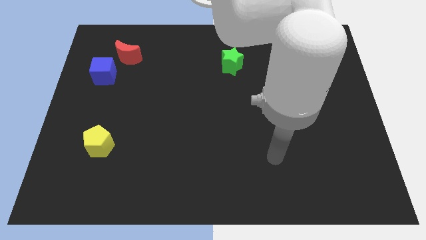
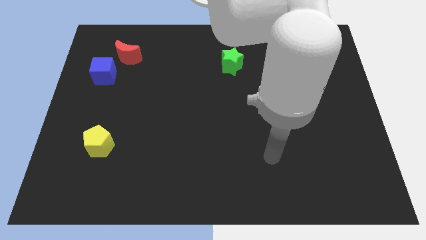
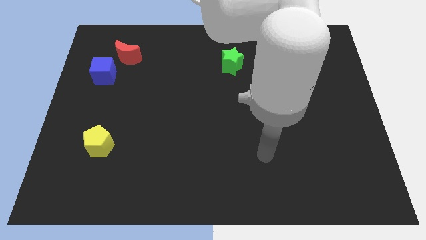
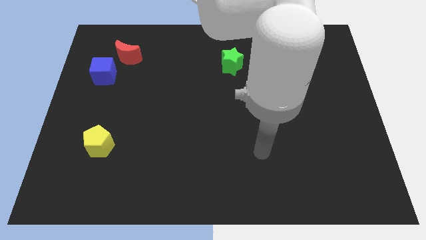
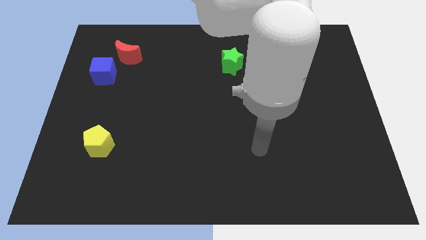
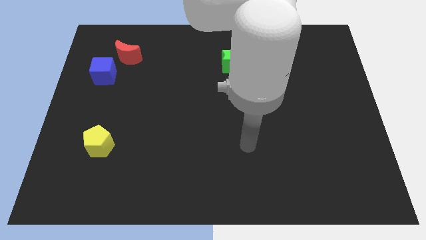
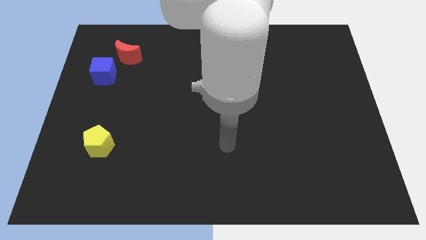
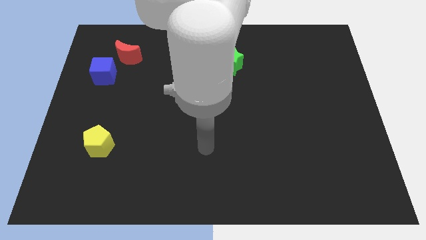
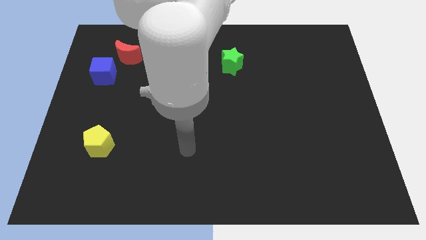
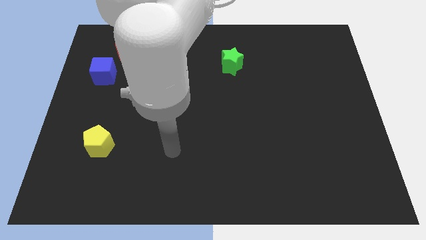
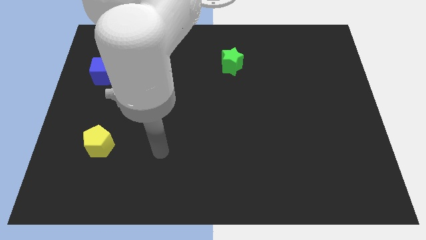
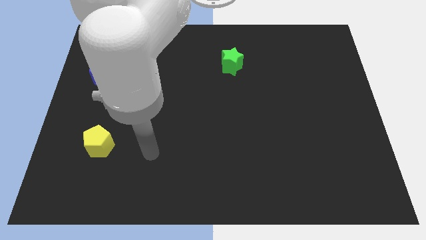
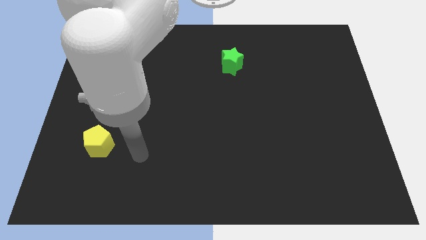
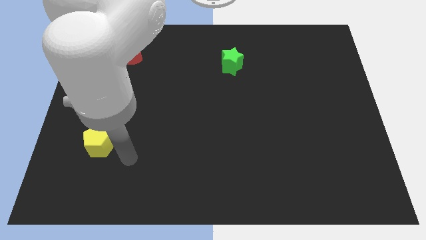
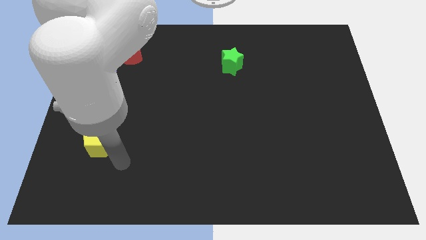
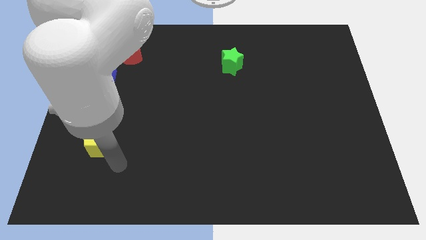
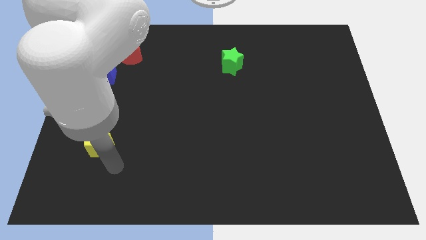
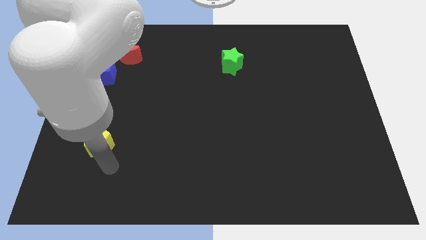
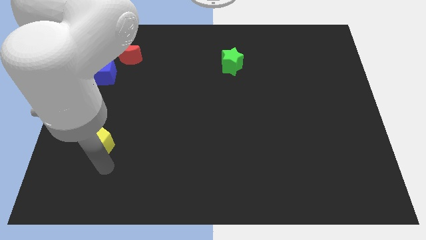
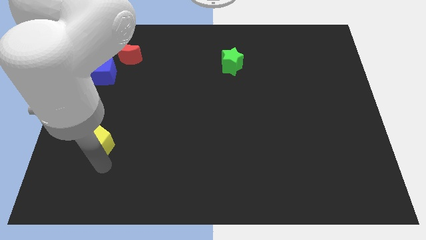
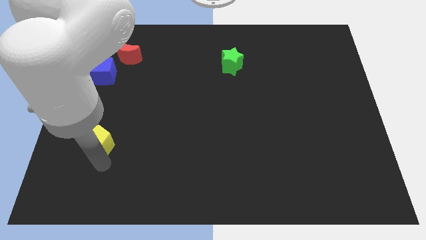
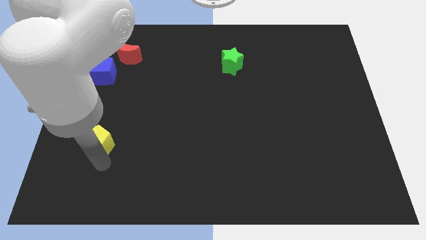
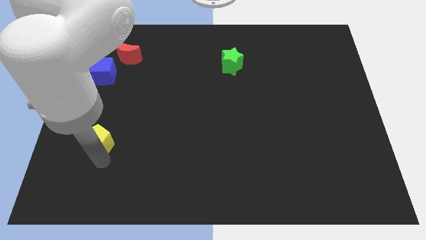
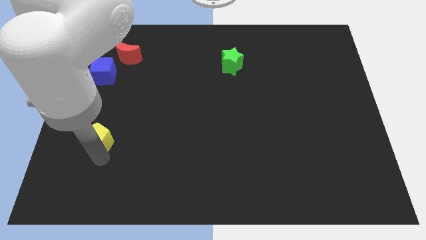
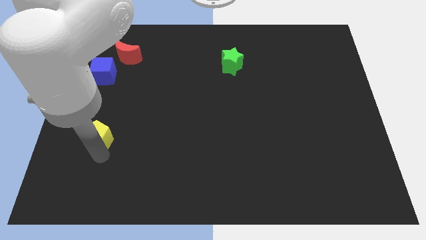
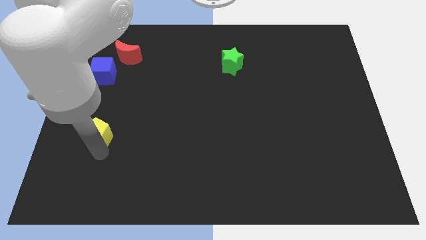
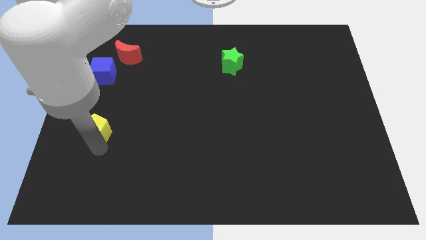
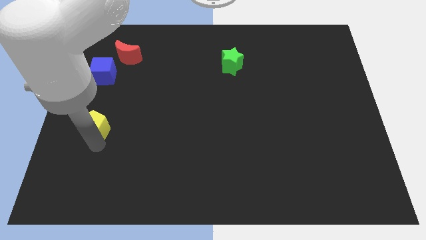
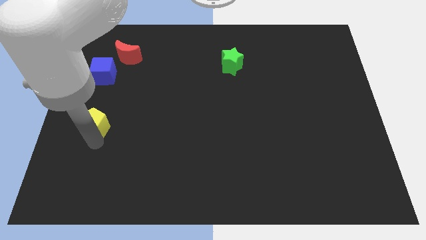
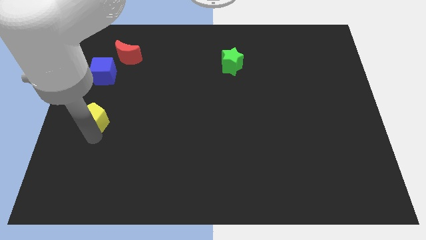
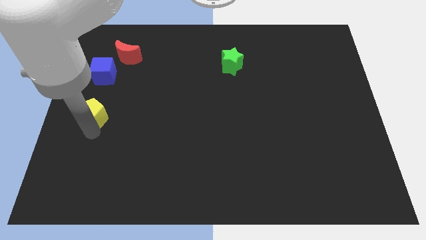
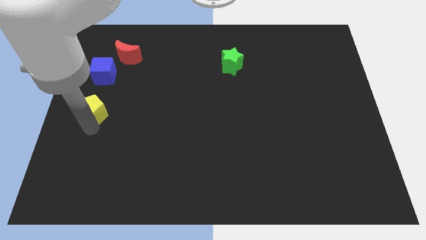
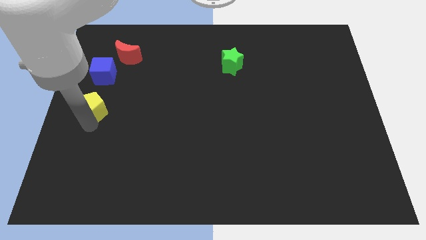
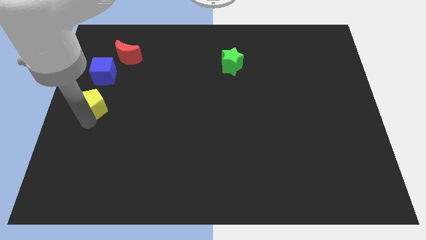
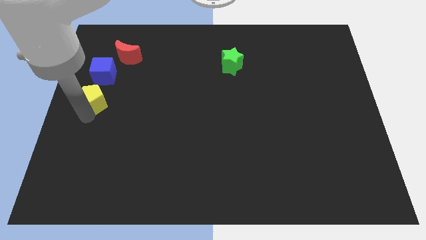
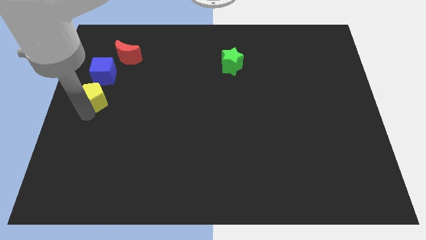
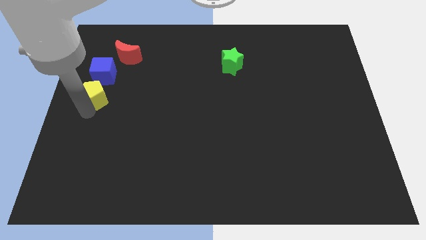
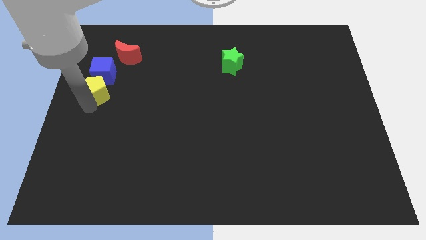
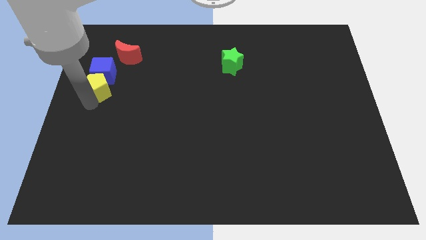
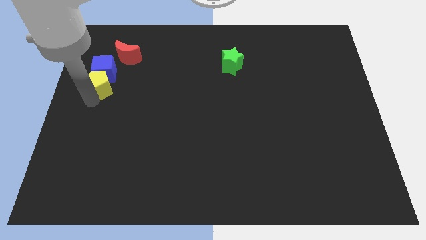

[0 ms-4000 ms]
move the yellow pentagon to the blue cube

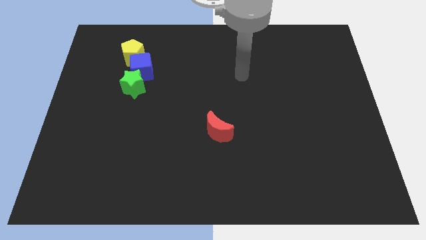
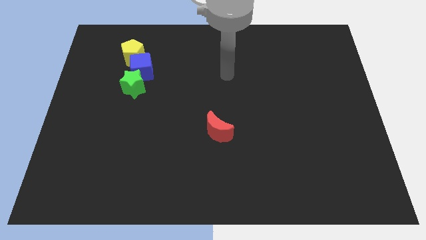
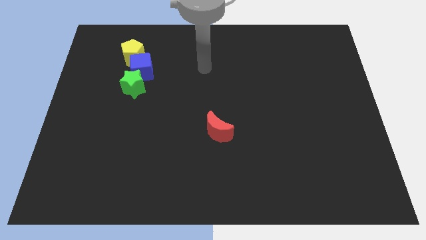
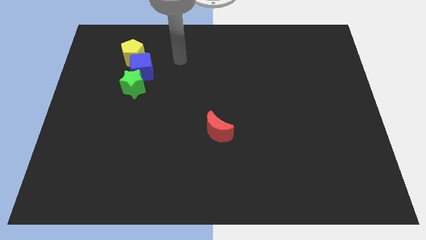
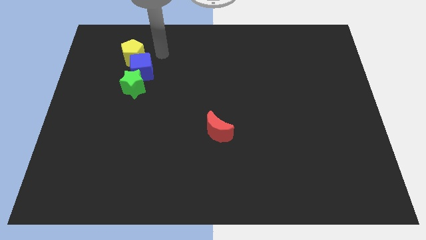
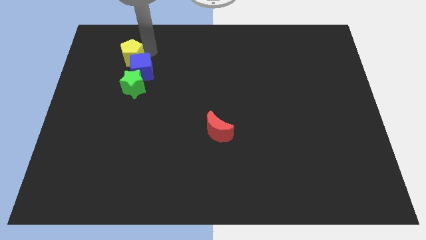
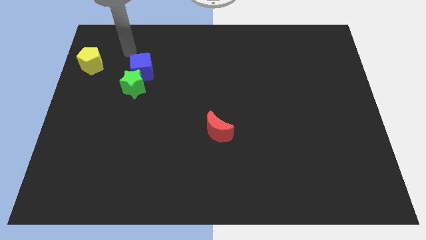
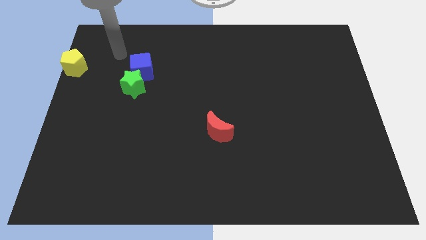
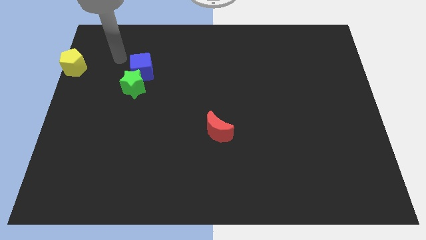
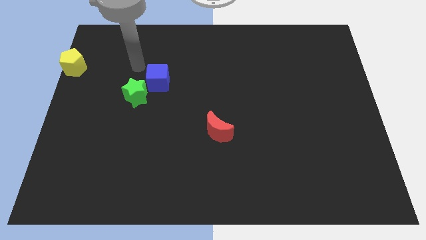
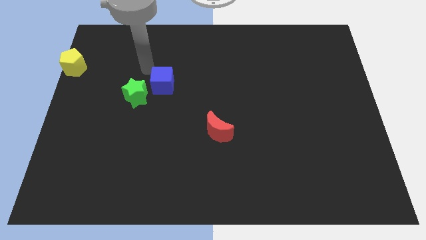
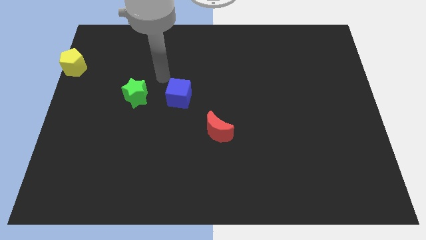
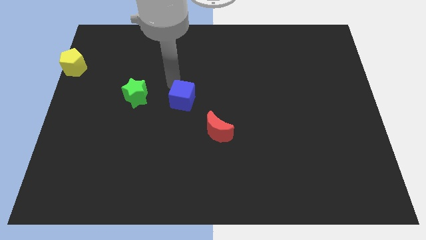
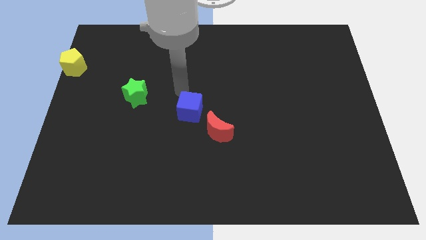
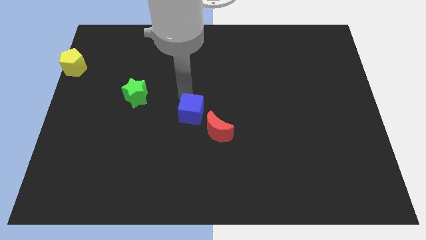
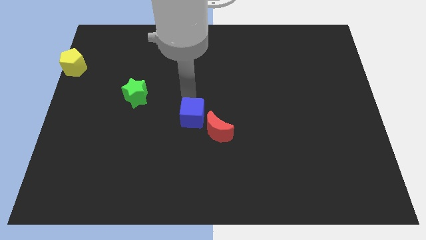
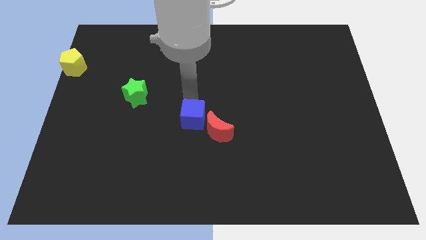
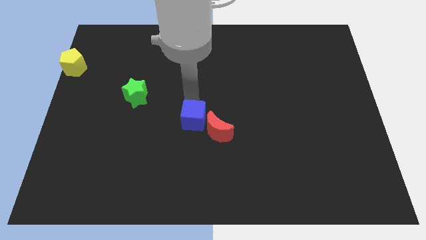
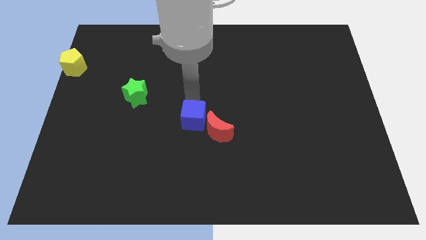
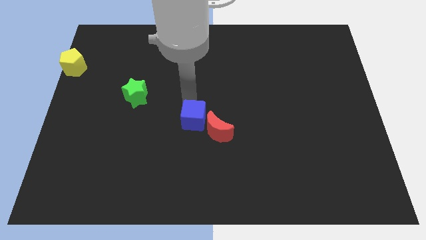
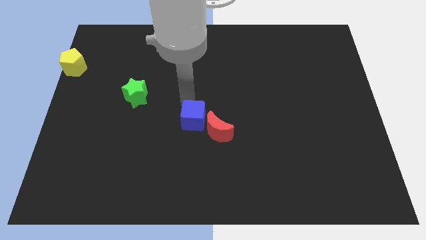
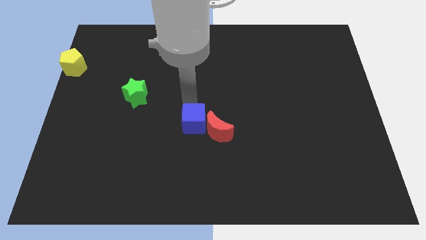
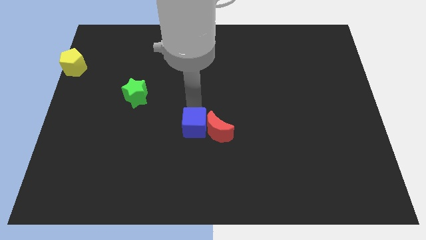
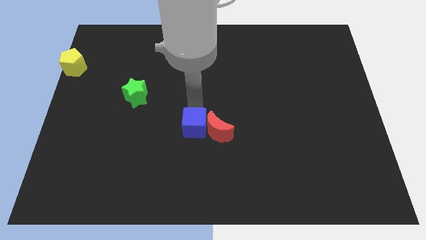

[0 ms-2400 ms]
slide the blue block next to the red block

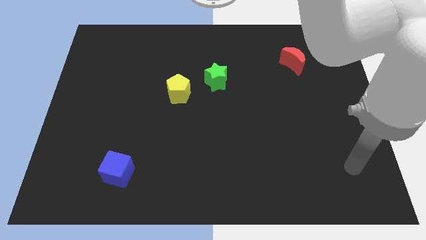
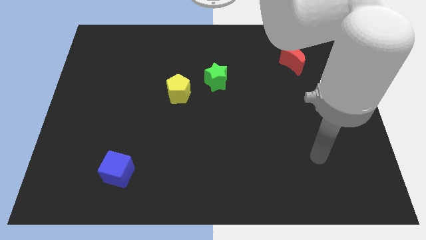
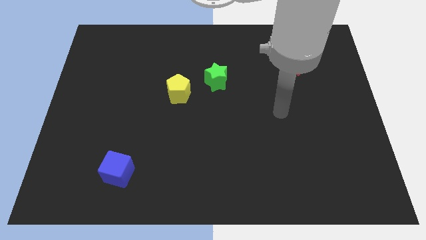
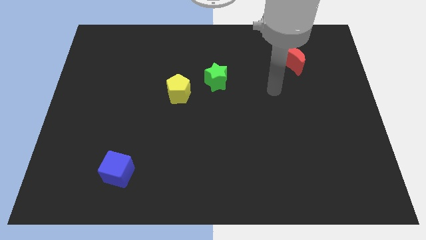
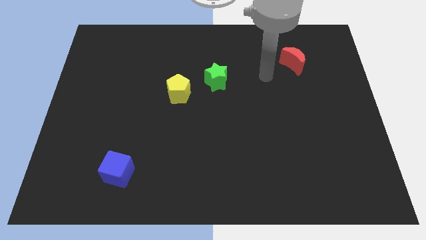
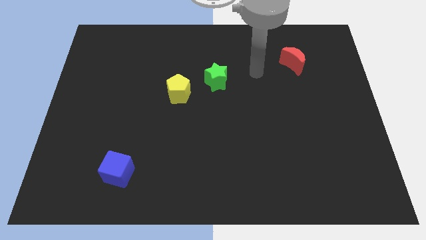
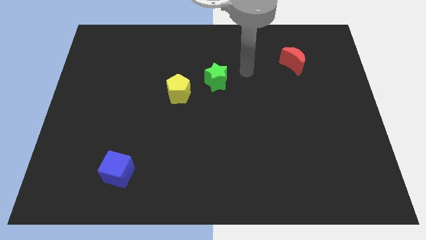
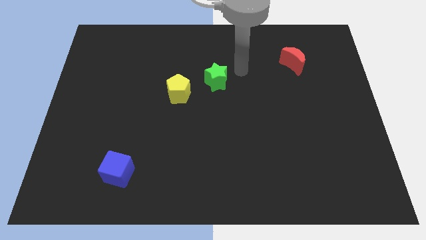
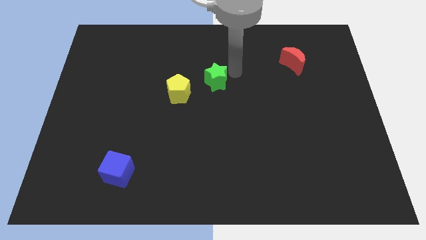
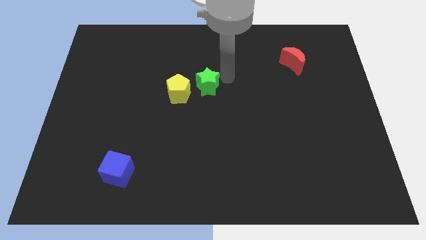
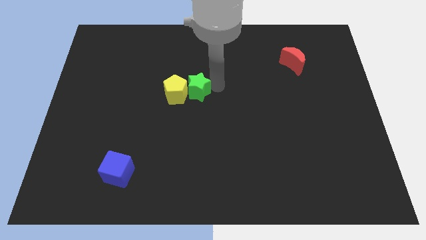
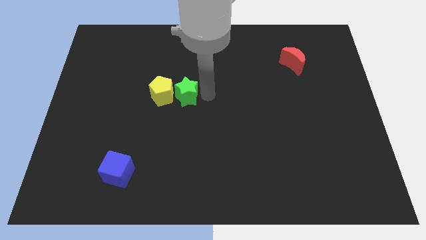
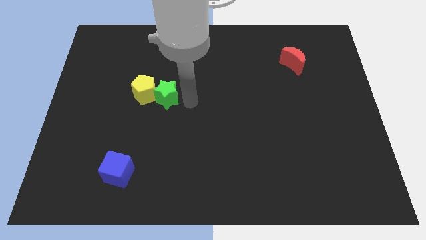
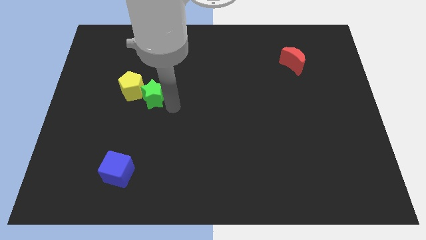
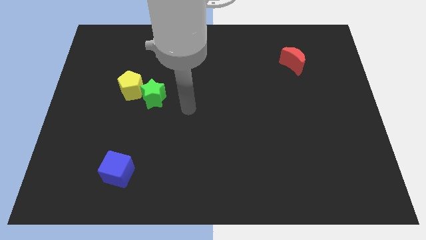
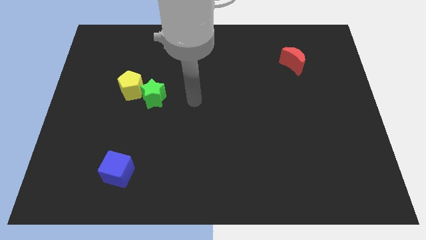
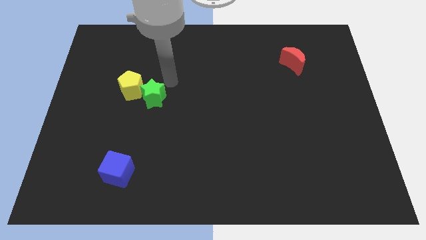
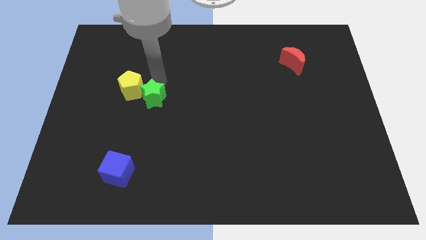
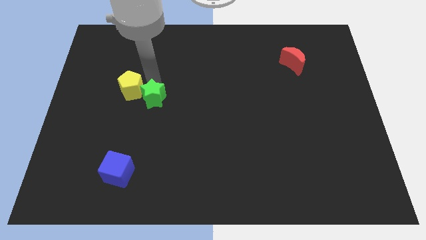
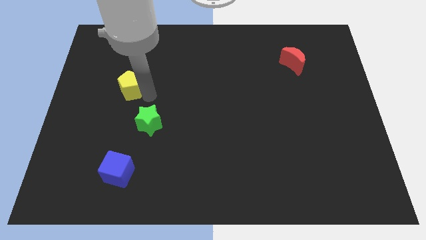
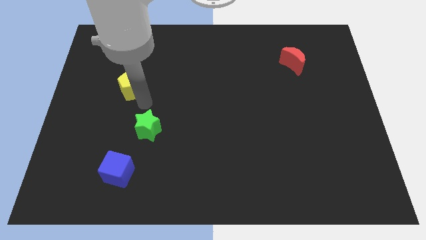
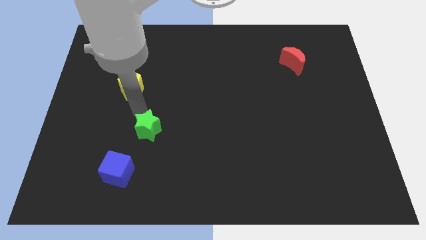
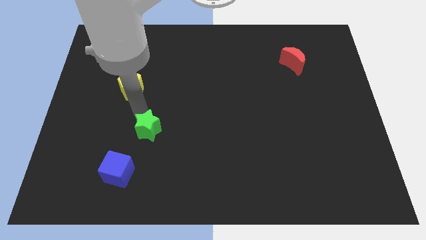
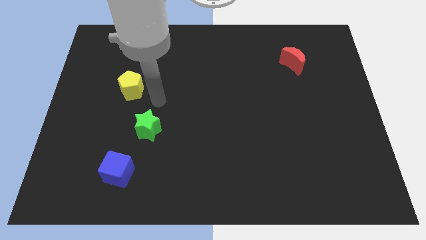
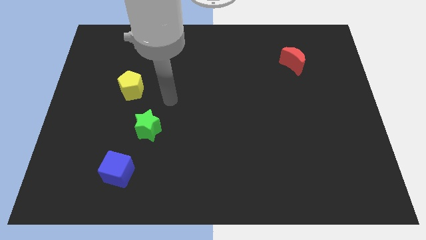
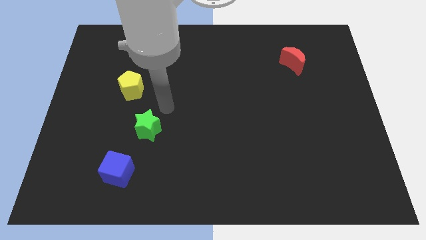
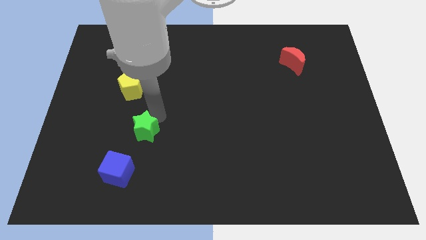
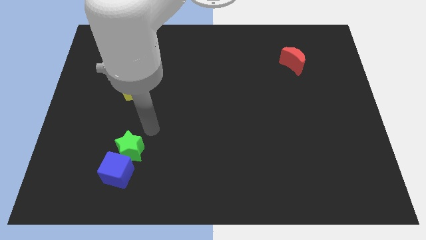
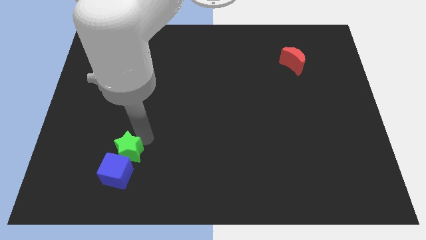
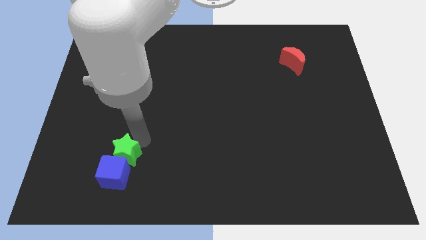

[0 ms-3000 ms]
move the green block close to the blue block
